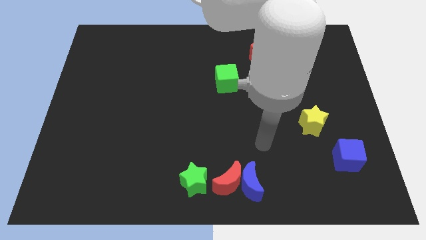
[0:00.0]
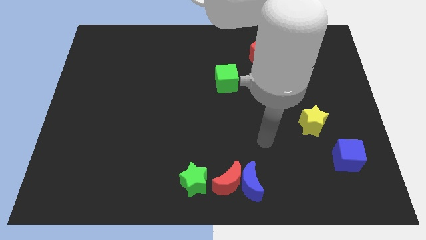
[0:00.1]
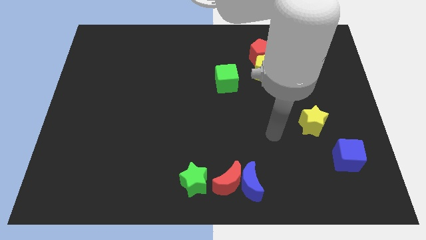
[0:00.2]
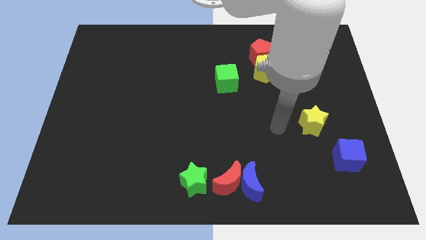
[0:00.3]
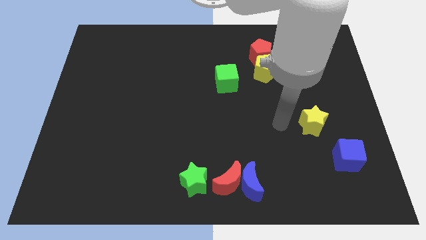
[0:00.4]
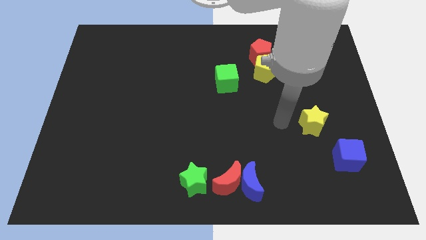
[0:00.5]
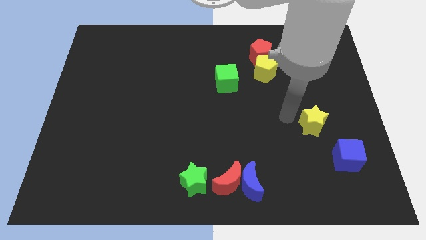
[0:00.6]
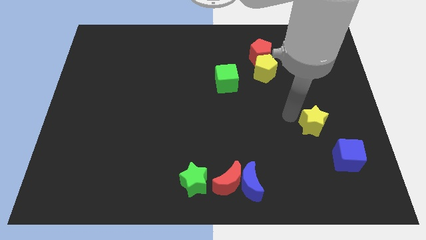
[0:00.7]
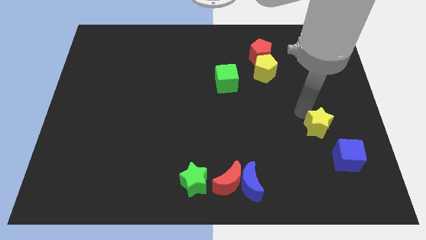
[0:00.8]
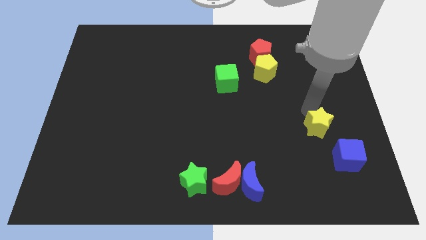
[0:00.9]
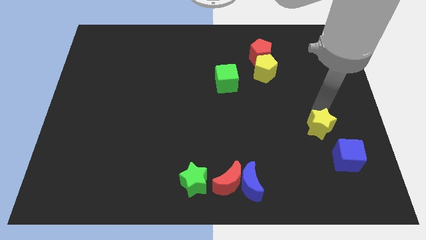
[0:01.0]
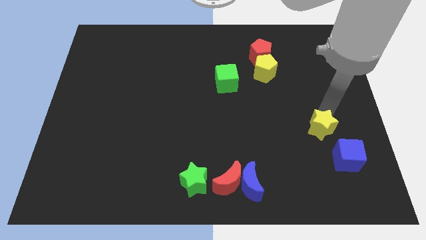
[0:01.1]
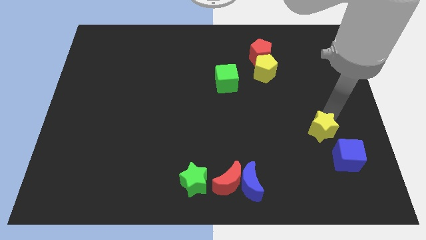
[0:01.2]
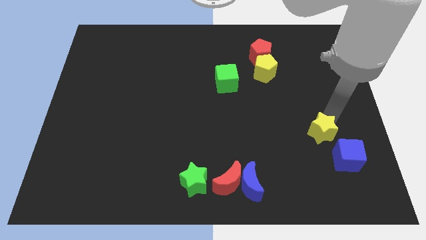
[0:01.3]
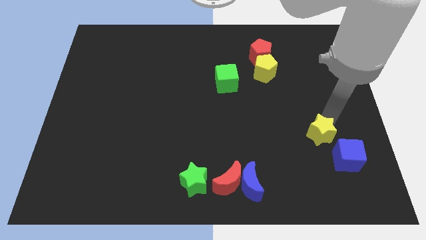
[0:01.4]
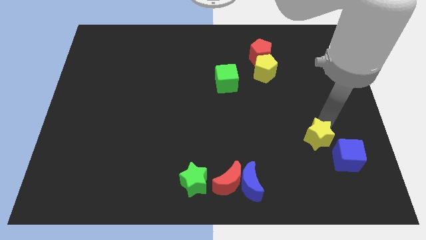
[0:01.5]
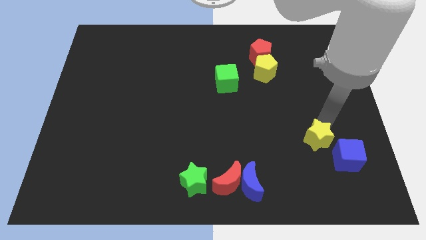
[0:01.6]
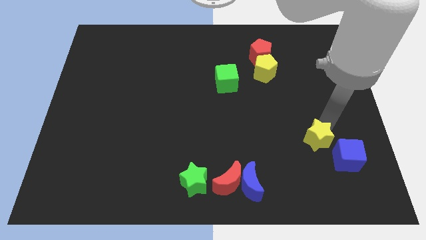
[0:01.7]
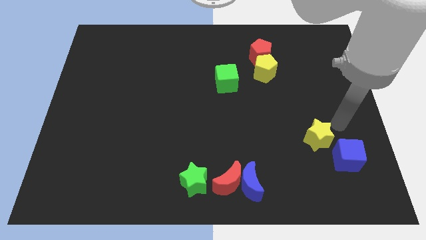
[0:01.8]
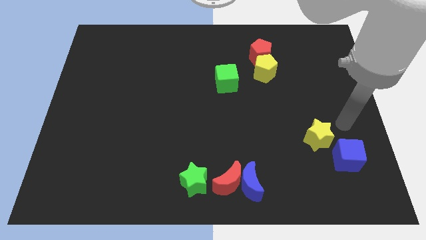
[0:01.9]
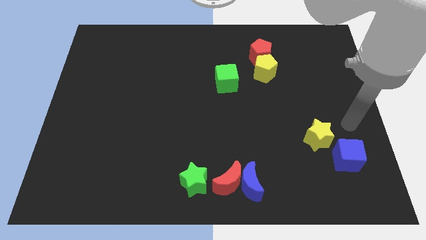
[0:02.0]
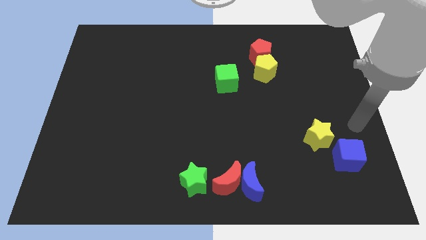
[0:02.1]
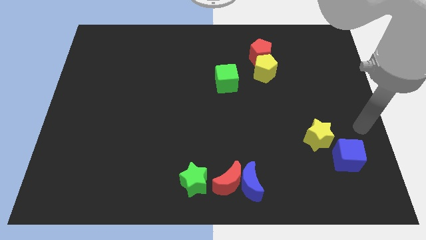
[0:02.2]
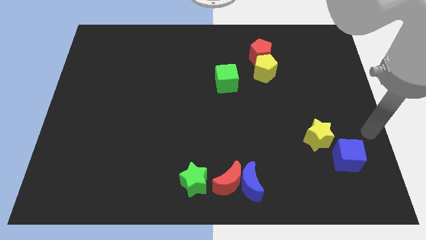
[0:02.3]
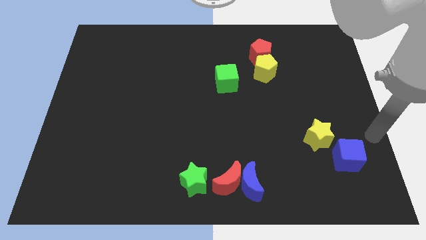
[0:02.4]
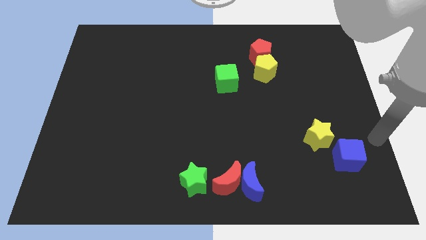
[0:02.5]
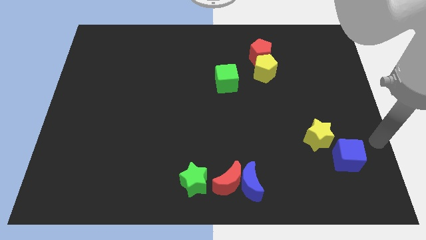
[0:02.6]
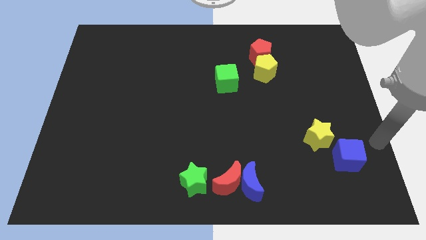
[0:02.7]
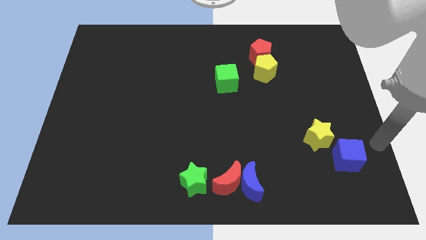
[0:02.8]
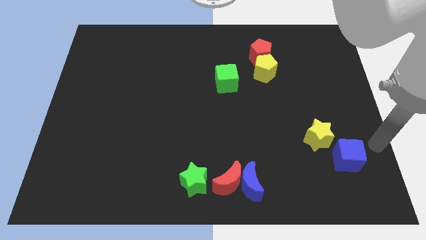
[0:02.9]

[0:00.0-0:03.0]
move the yellow star left above the blue cube

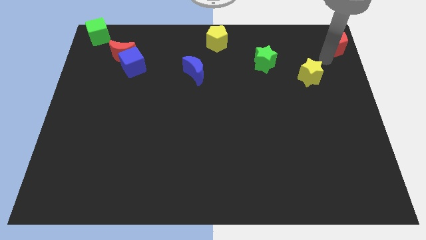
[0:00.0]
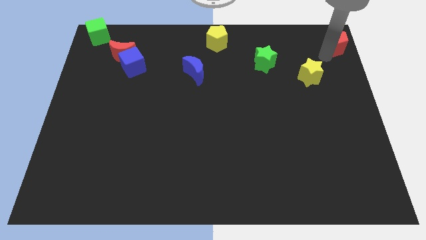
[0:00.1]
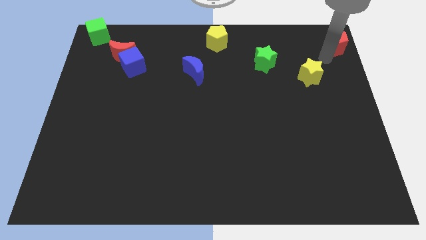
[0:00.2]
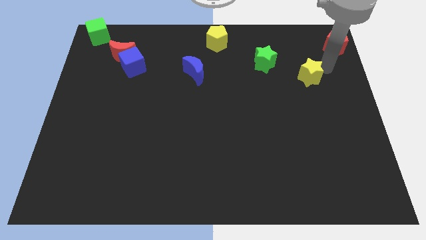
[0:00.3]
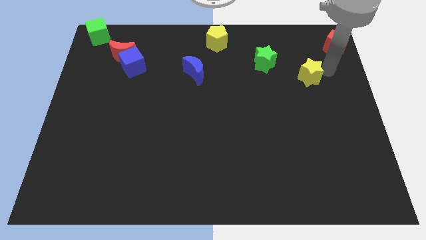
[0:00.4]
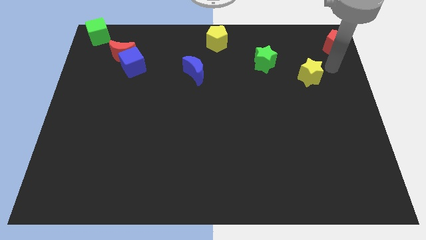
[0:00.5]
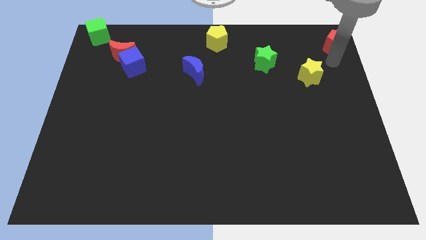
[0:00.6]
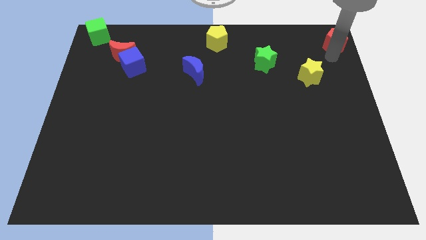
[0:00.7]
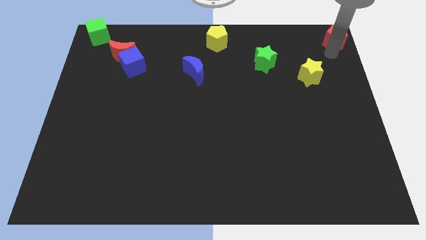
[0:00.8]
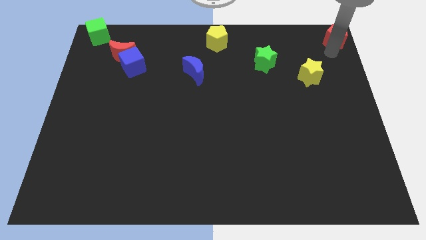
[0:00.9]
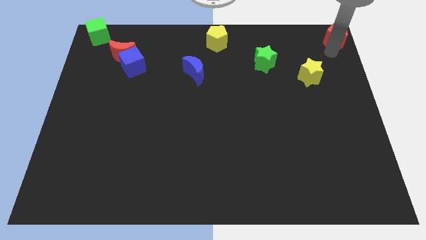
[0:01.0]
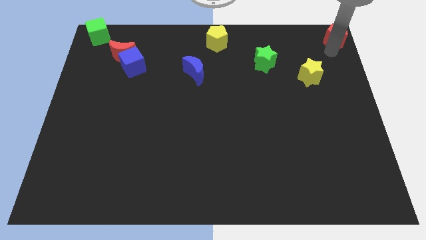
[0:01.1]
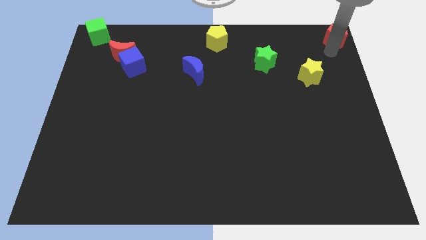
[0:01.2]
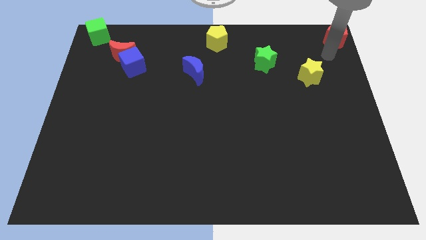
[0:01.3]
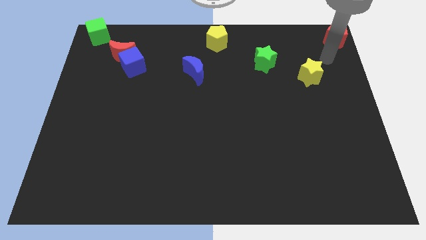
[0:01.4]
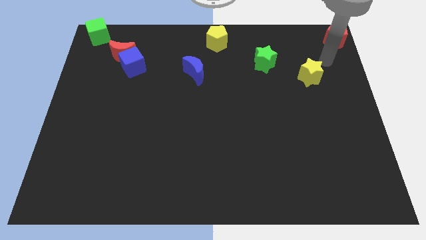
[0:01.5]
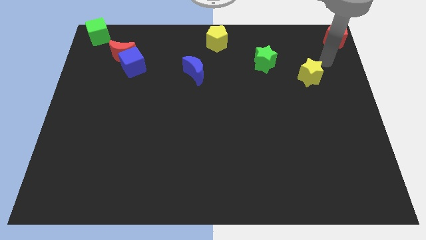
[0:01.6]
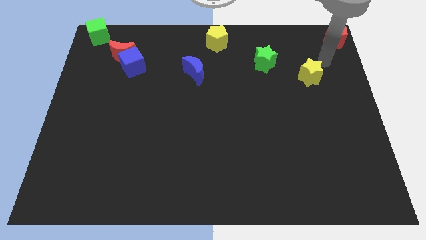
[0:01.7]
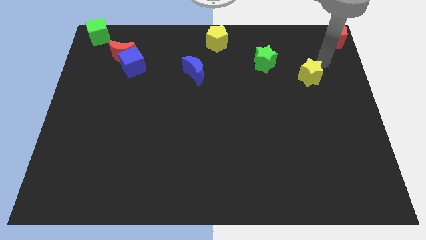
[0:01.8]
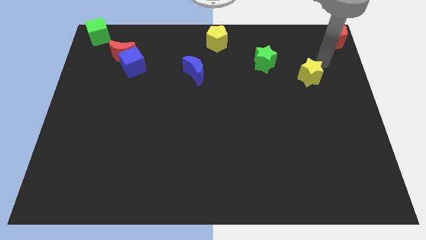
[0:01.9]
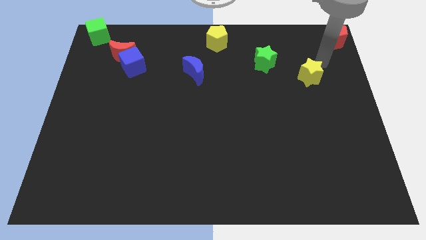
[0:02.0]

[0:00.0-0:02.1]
move red pentagon towards the right top corner of the board

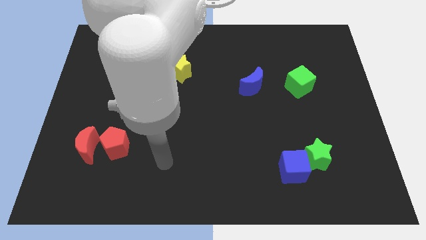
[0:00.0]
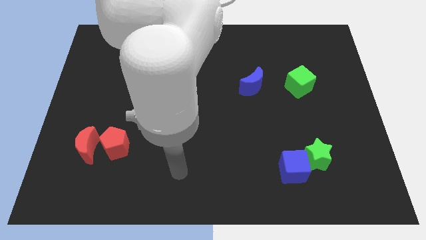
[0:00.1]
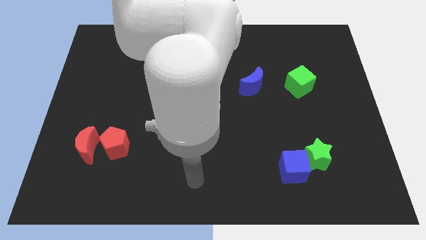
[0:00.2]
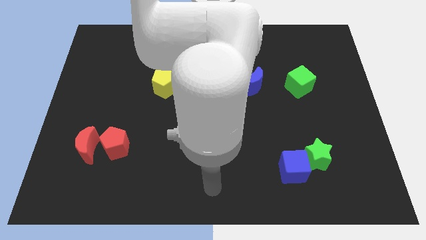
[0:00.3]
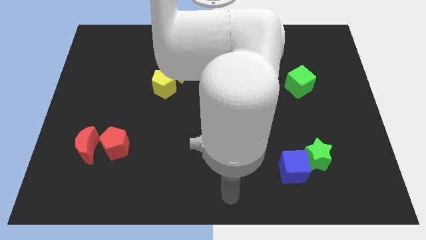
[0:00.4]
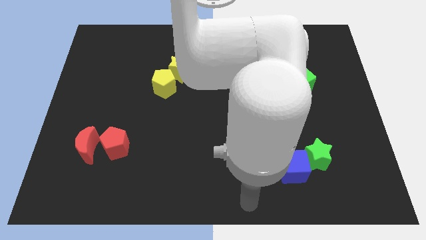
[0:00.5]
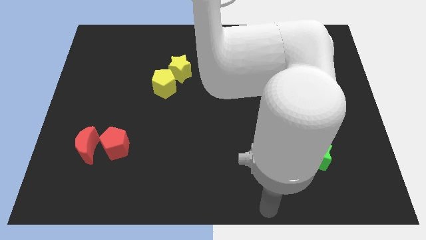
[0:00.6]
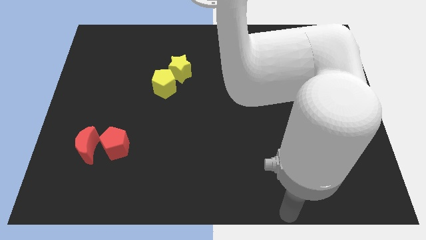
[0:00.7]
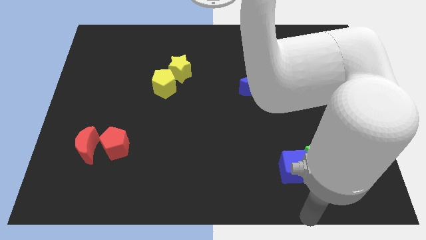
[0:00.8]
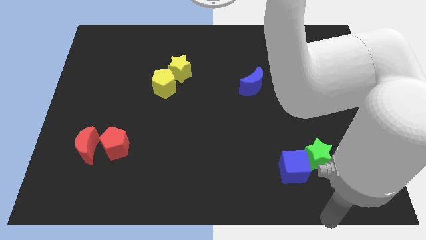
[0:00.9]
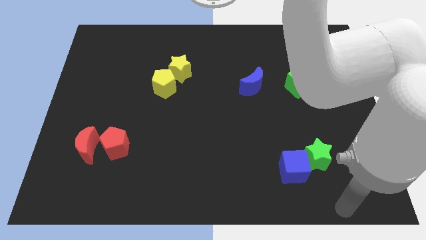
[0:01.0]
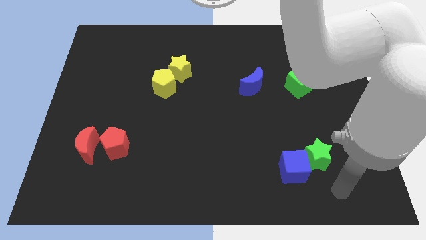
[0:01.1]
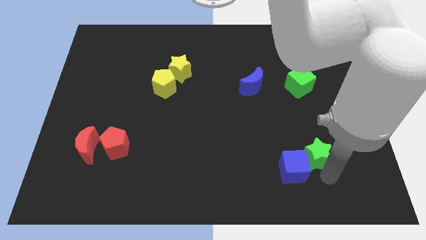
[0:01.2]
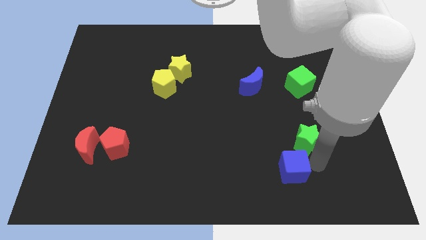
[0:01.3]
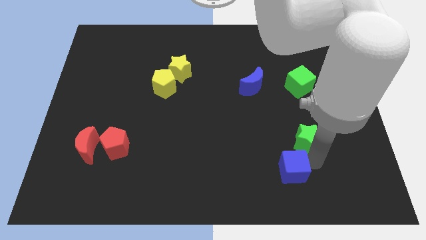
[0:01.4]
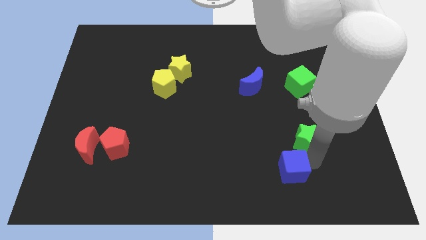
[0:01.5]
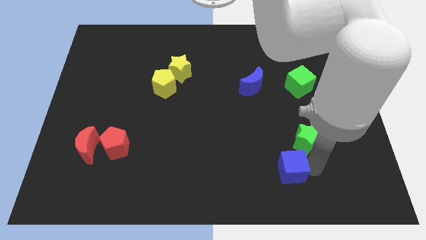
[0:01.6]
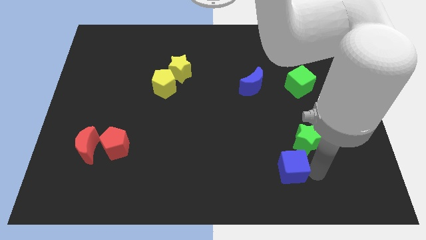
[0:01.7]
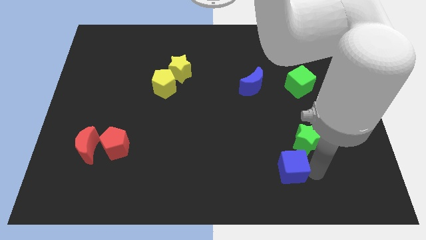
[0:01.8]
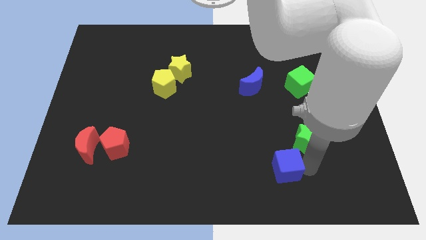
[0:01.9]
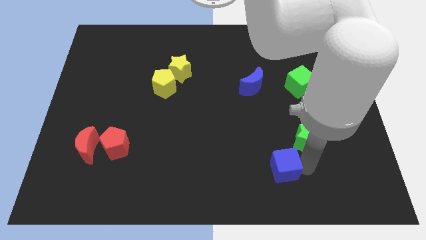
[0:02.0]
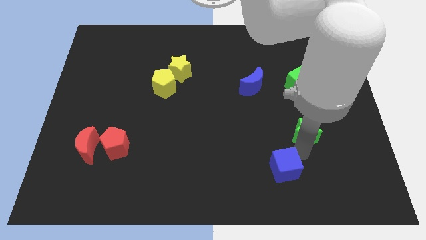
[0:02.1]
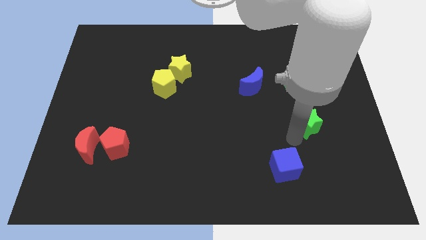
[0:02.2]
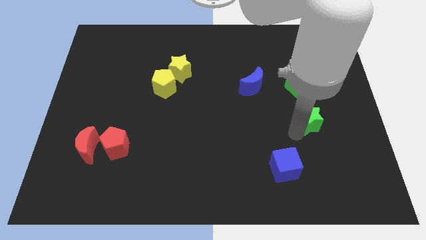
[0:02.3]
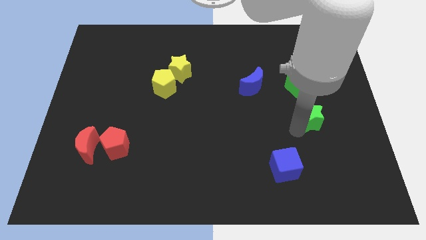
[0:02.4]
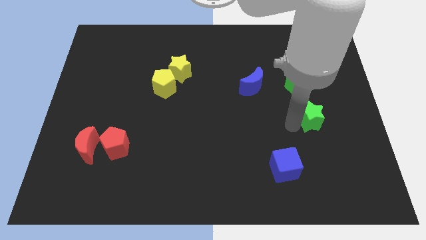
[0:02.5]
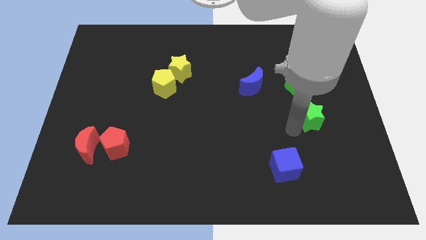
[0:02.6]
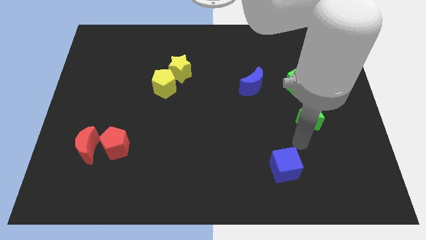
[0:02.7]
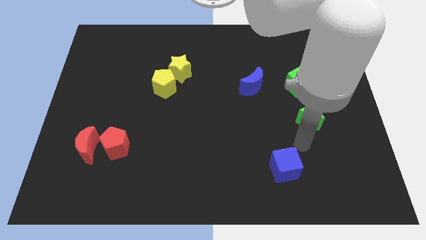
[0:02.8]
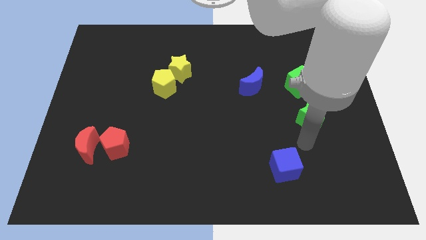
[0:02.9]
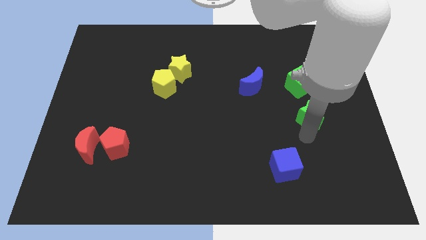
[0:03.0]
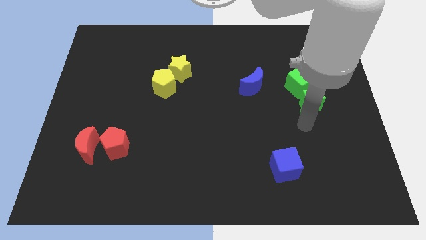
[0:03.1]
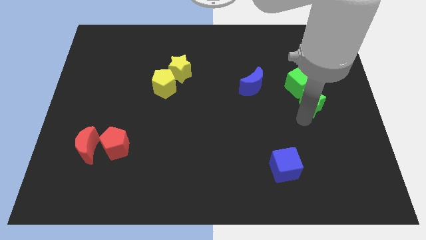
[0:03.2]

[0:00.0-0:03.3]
place the green star under the green cube

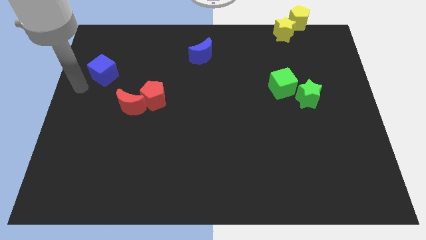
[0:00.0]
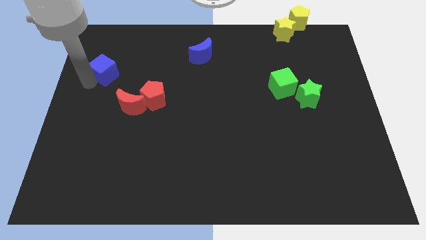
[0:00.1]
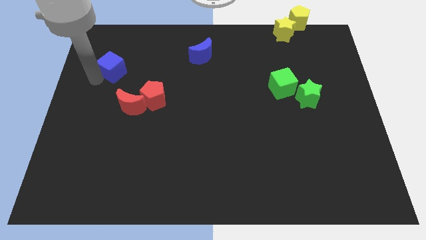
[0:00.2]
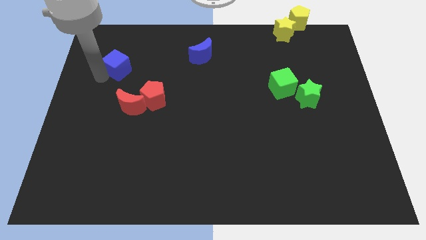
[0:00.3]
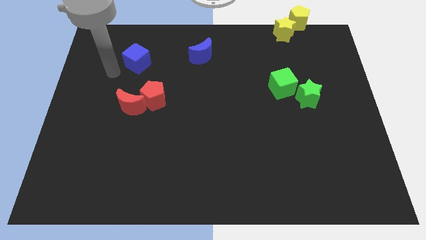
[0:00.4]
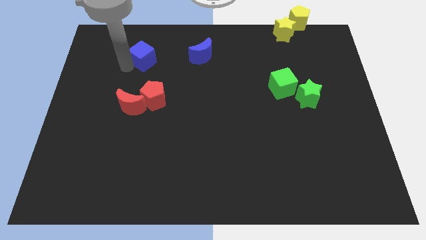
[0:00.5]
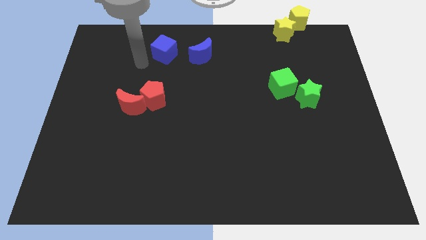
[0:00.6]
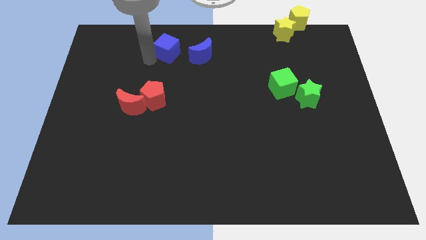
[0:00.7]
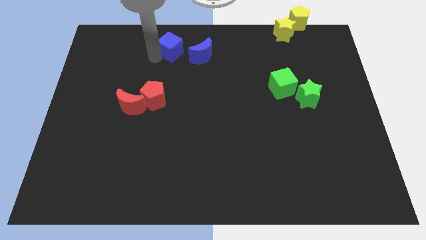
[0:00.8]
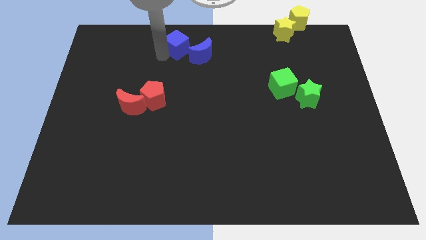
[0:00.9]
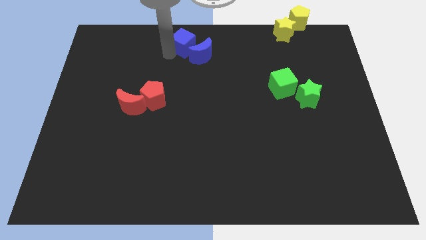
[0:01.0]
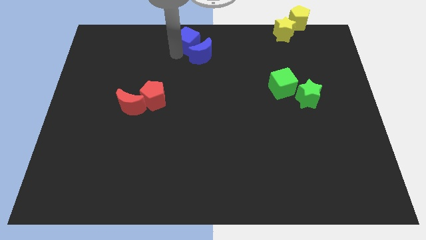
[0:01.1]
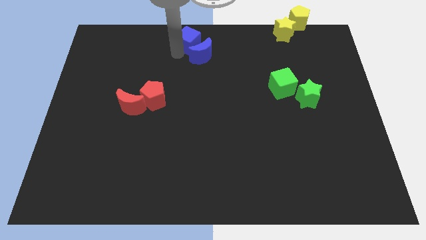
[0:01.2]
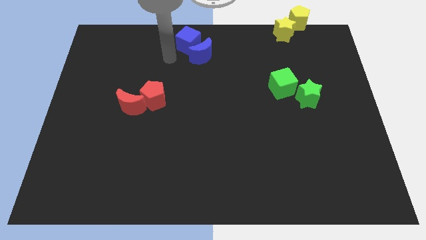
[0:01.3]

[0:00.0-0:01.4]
move the blue cube to the top of blue crescent
